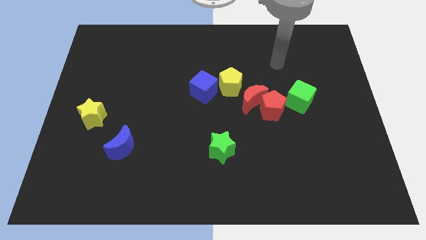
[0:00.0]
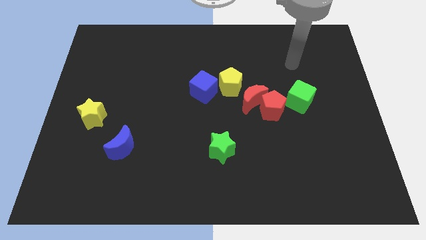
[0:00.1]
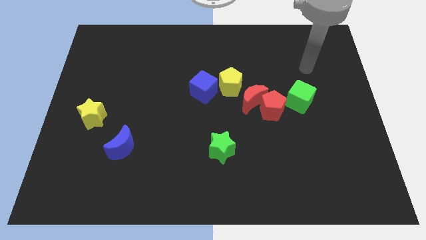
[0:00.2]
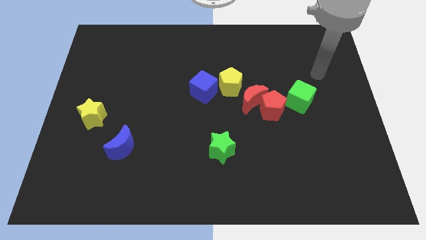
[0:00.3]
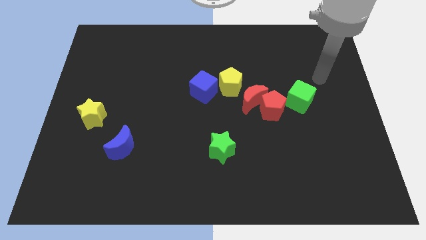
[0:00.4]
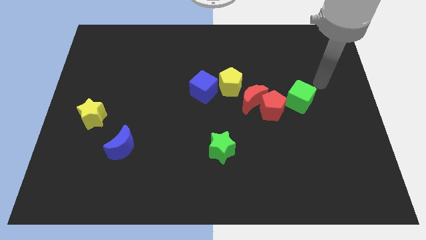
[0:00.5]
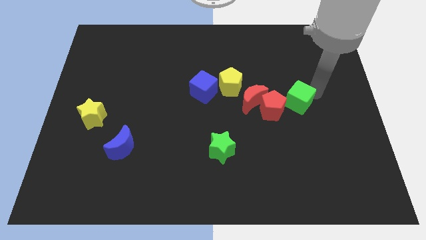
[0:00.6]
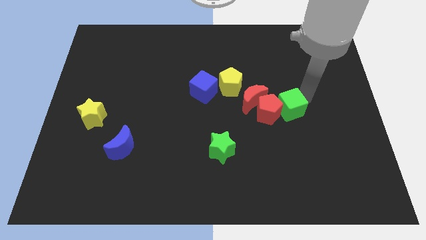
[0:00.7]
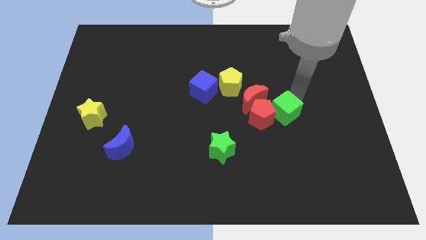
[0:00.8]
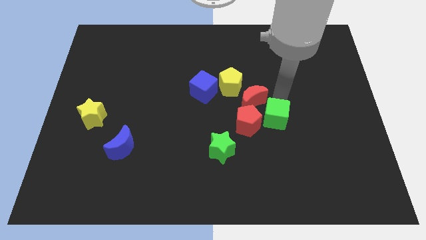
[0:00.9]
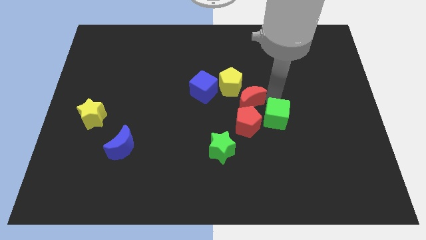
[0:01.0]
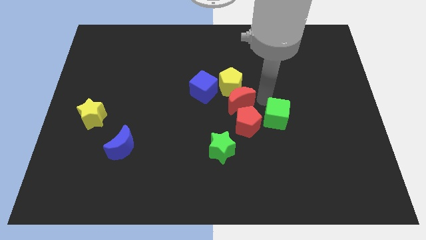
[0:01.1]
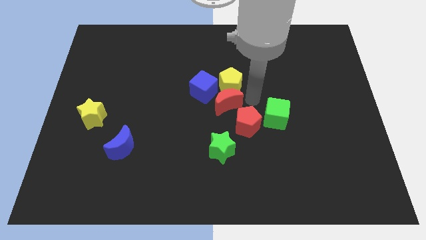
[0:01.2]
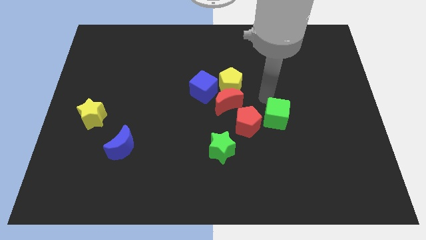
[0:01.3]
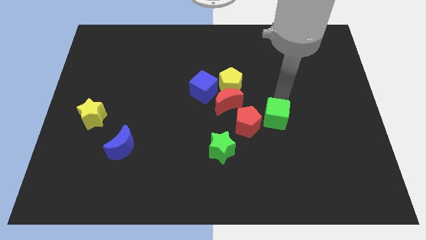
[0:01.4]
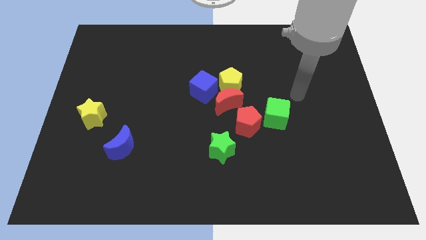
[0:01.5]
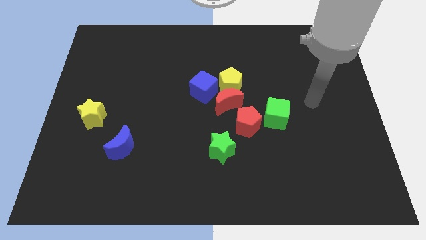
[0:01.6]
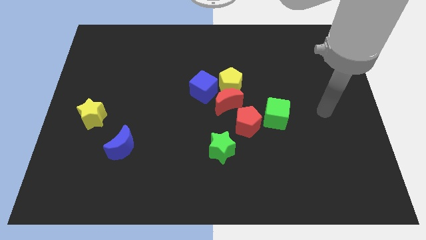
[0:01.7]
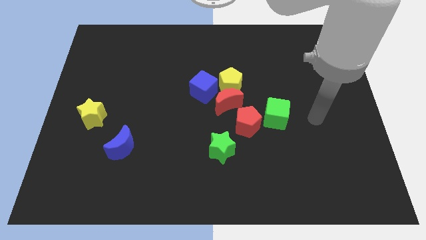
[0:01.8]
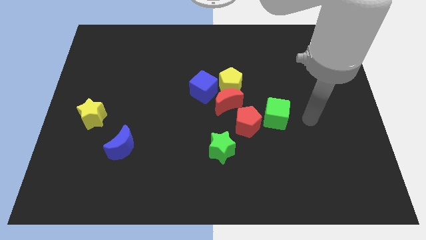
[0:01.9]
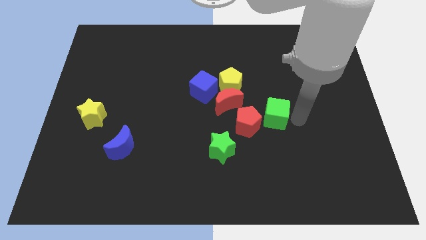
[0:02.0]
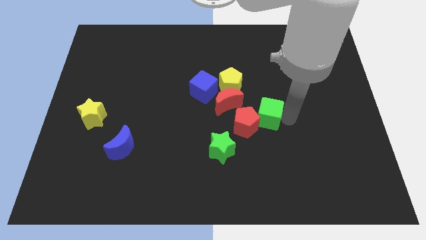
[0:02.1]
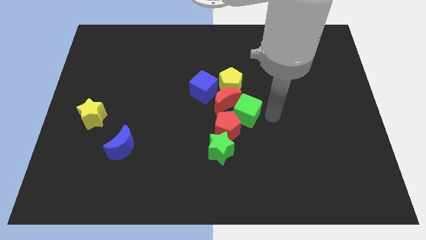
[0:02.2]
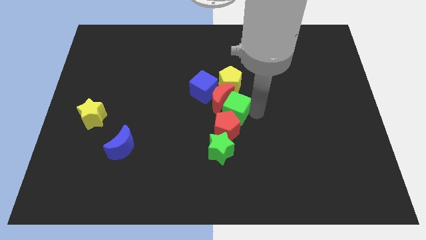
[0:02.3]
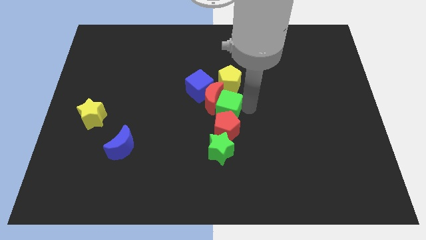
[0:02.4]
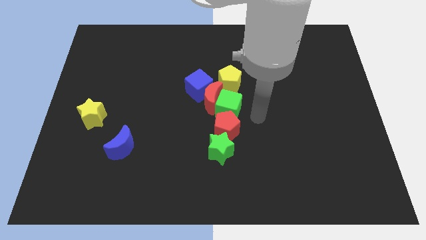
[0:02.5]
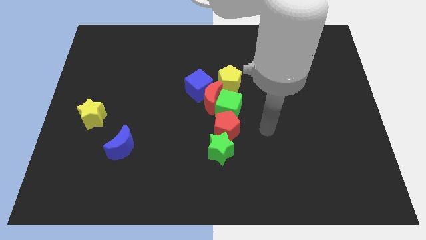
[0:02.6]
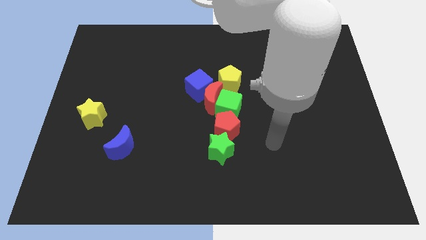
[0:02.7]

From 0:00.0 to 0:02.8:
push the green cube to the right side of the red crescent

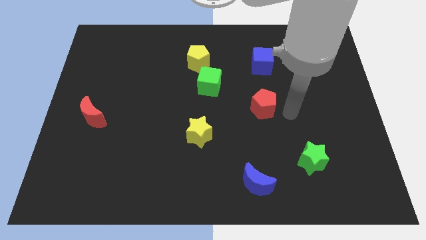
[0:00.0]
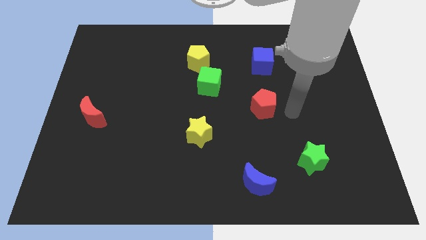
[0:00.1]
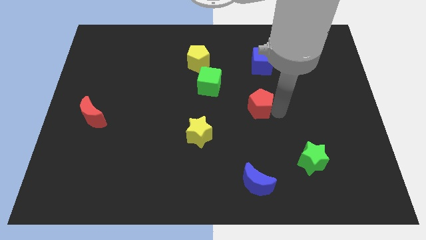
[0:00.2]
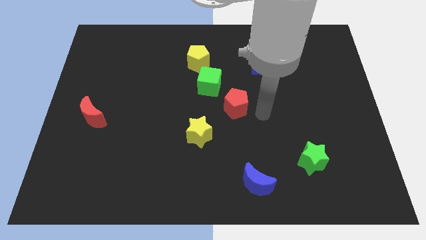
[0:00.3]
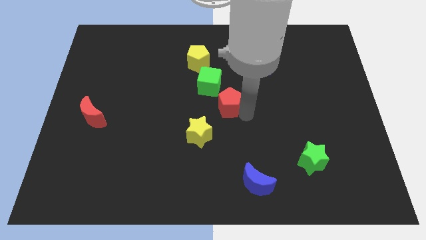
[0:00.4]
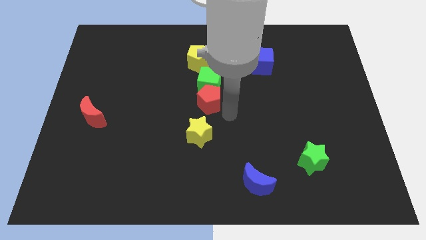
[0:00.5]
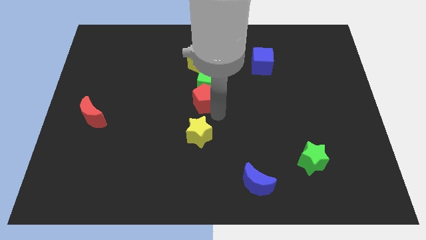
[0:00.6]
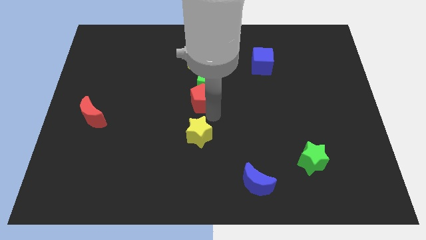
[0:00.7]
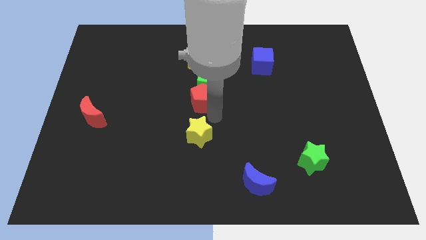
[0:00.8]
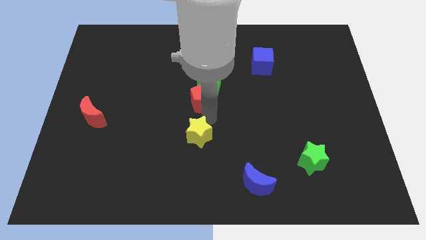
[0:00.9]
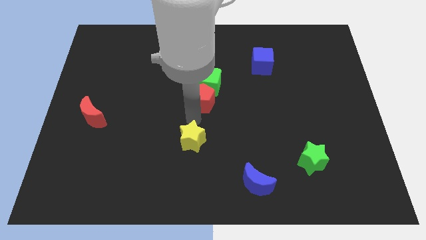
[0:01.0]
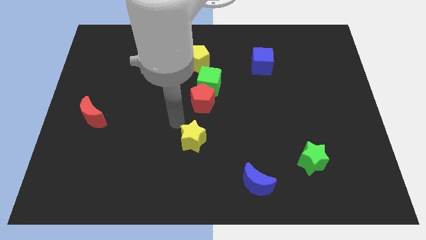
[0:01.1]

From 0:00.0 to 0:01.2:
place the red pentagon to the bottom of the blue cube

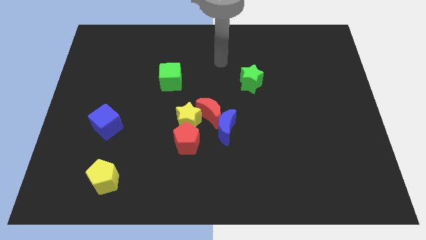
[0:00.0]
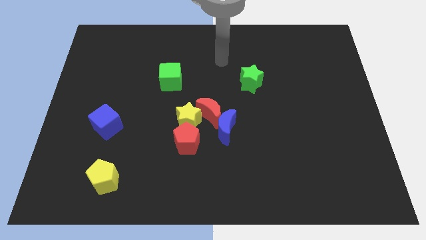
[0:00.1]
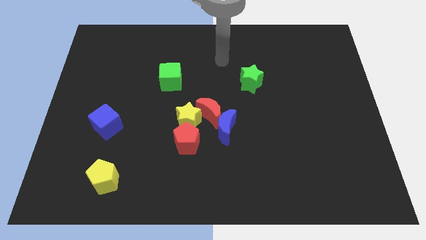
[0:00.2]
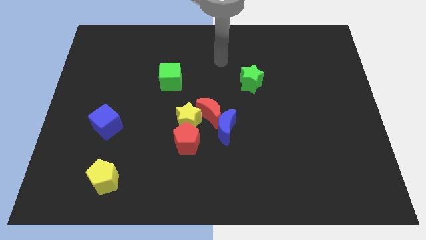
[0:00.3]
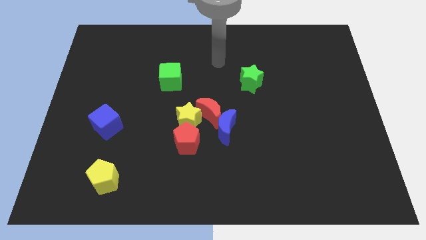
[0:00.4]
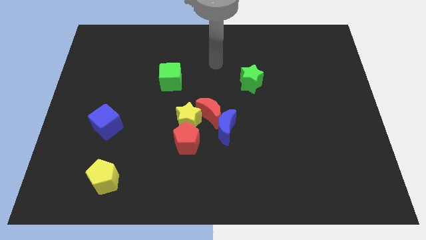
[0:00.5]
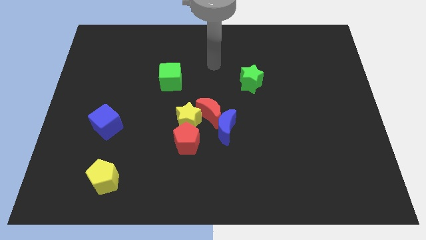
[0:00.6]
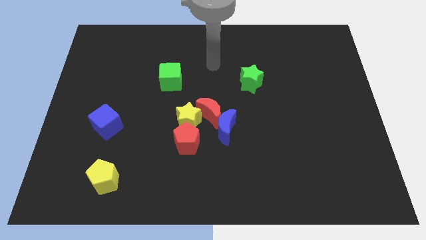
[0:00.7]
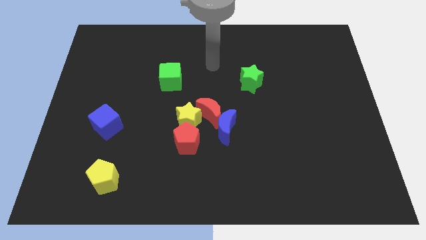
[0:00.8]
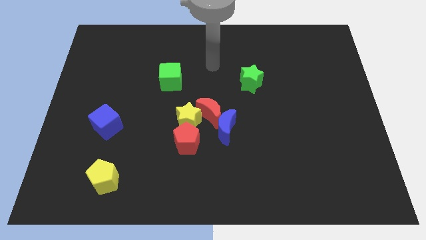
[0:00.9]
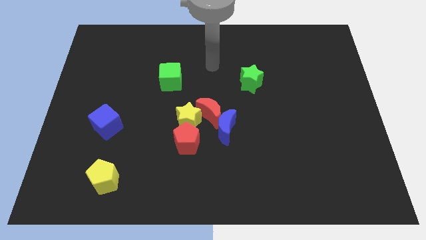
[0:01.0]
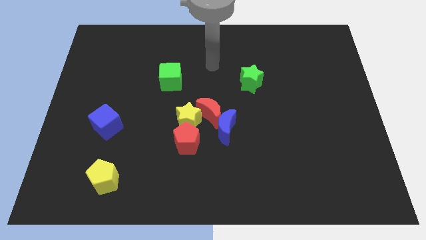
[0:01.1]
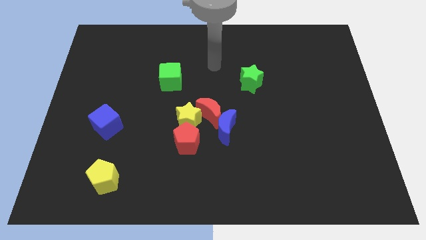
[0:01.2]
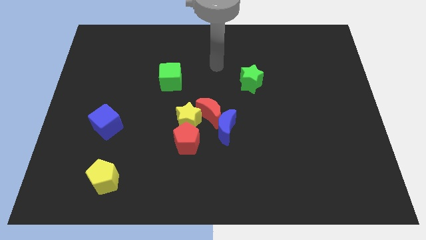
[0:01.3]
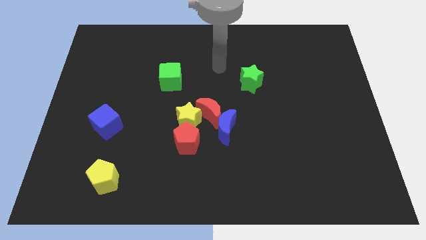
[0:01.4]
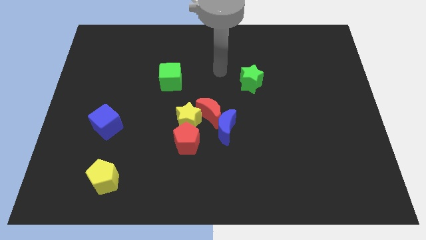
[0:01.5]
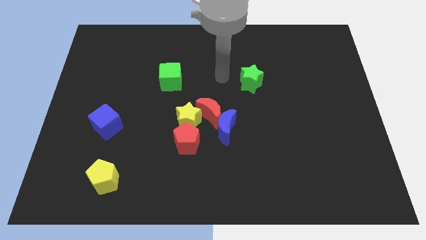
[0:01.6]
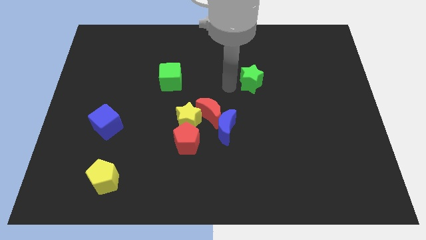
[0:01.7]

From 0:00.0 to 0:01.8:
point your arm beside green star

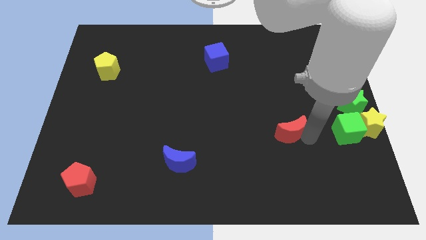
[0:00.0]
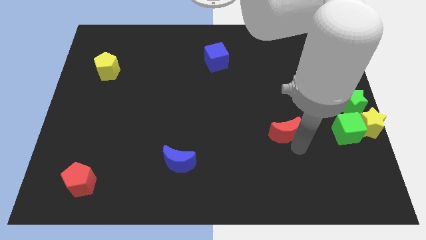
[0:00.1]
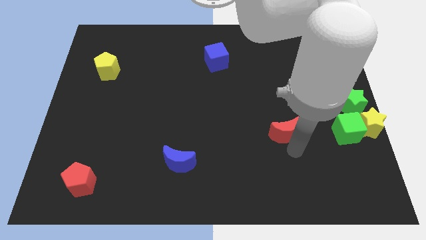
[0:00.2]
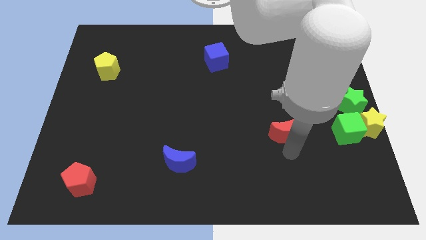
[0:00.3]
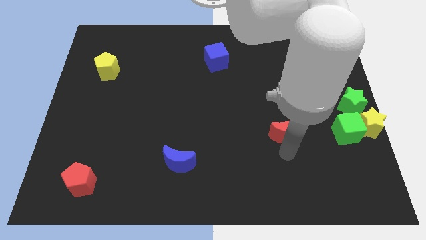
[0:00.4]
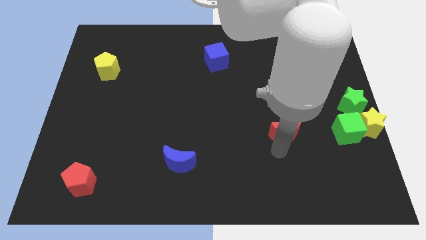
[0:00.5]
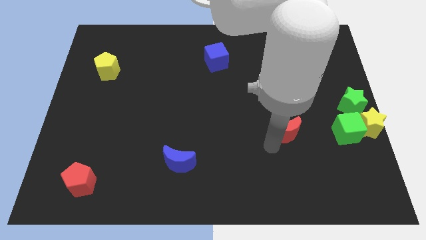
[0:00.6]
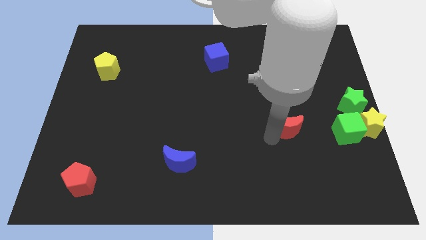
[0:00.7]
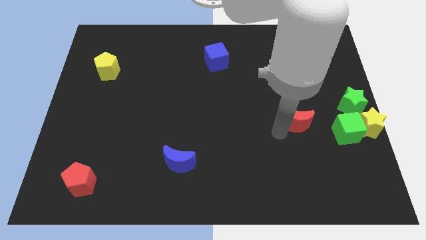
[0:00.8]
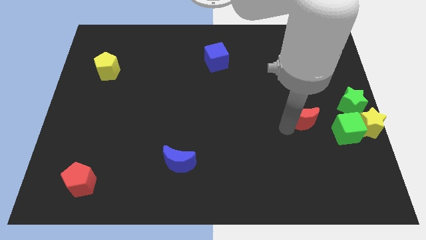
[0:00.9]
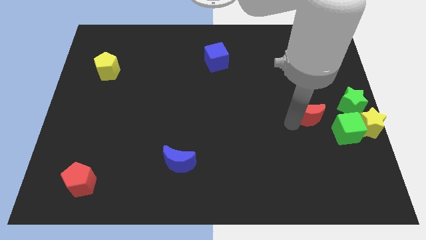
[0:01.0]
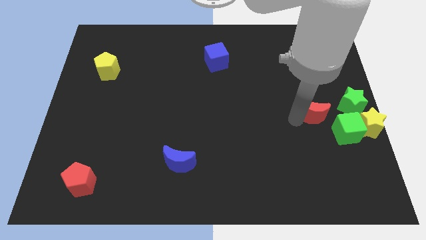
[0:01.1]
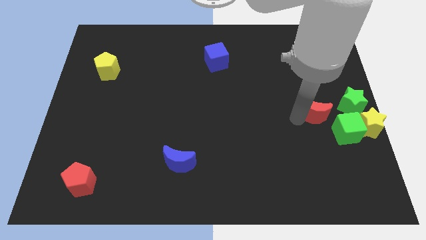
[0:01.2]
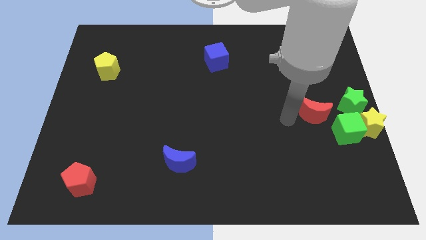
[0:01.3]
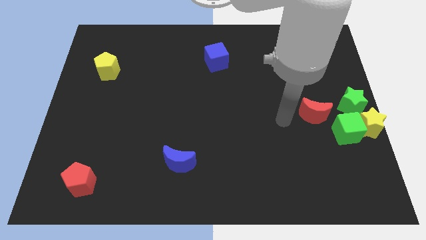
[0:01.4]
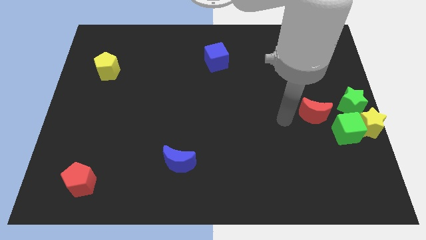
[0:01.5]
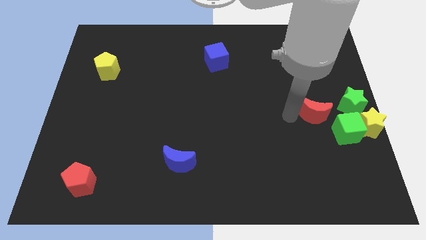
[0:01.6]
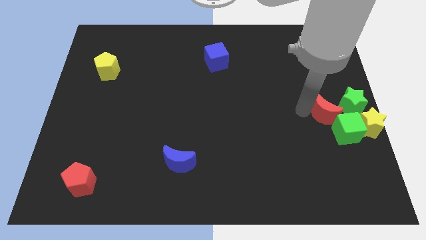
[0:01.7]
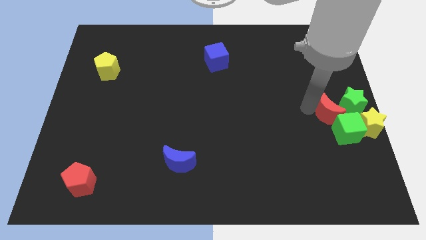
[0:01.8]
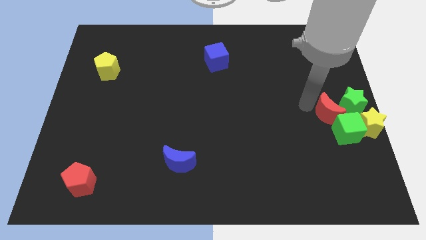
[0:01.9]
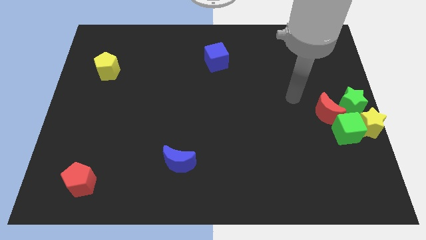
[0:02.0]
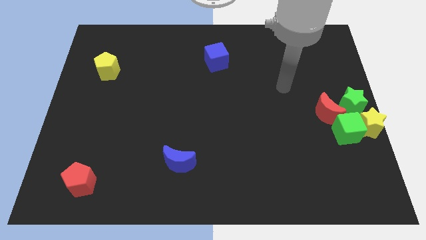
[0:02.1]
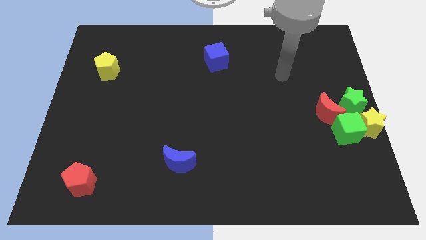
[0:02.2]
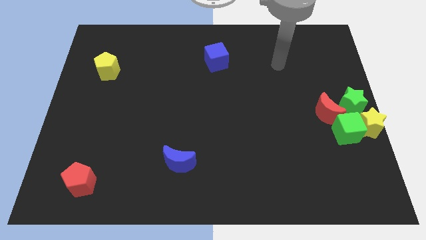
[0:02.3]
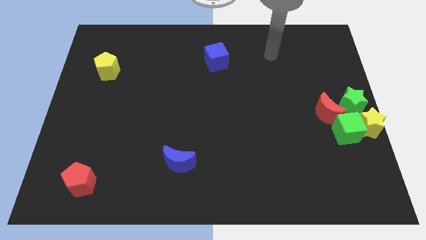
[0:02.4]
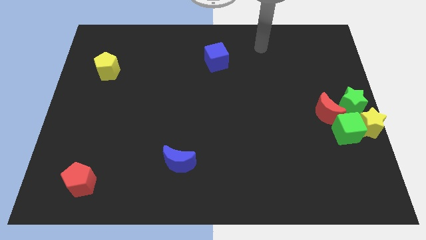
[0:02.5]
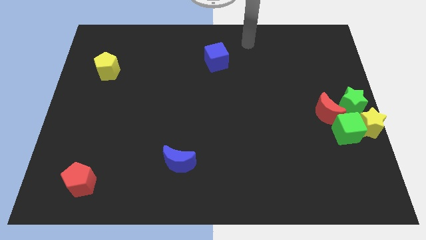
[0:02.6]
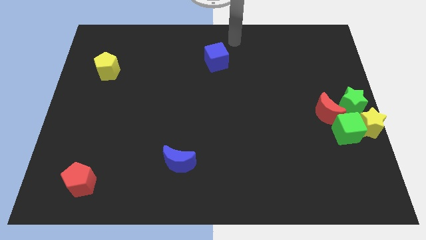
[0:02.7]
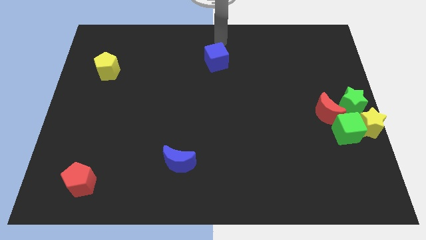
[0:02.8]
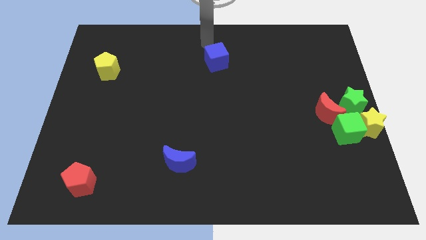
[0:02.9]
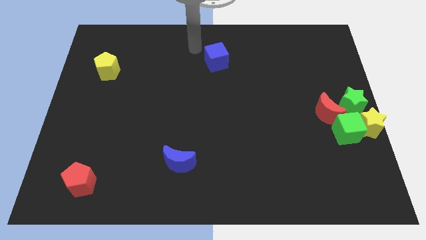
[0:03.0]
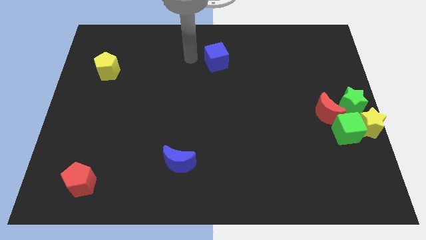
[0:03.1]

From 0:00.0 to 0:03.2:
slide the red crescent in between the green blocks
